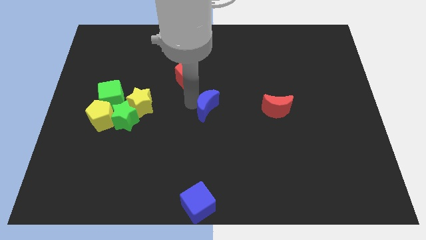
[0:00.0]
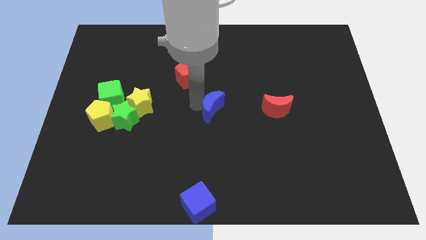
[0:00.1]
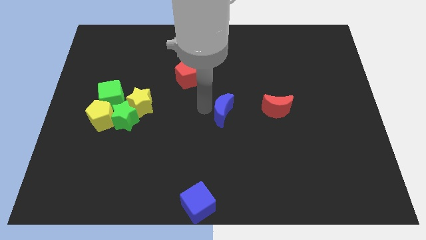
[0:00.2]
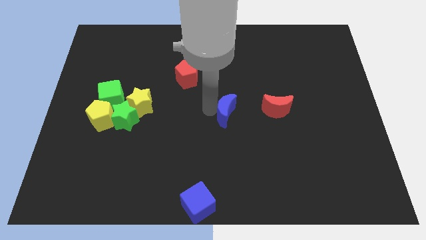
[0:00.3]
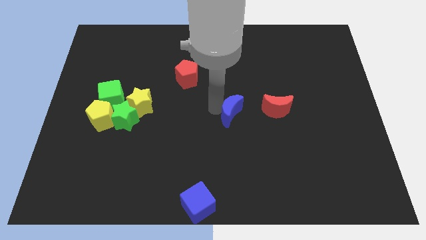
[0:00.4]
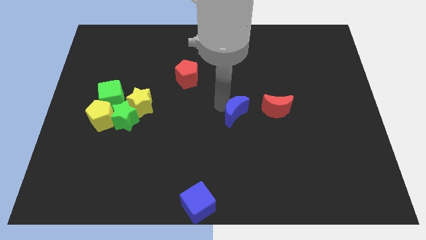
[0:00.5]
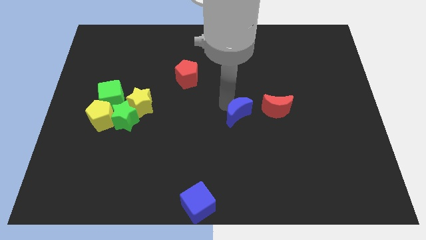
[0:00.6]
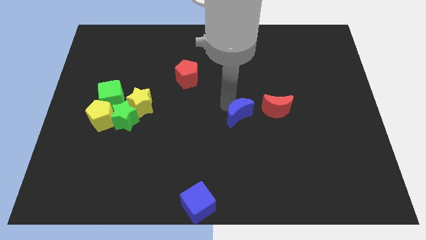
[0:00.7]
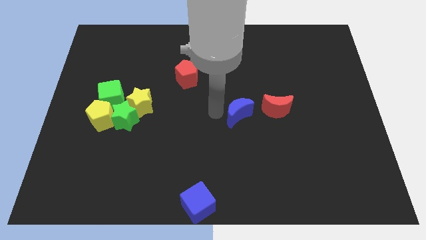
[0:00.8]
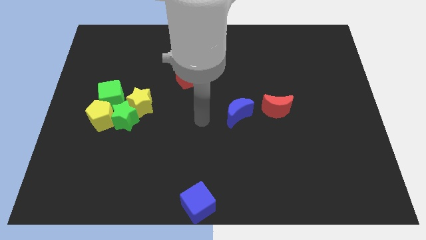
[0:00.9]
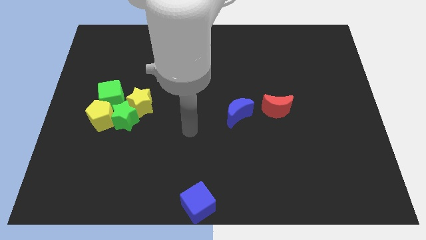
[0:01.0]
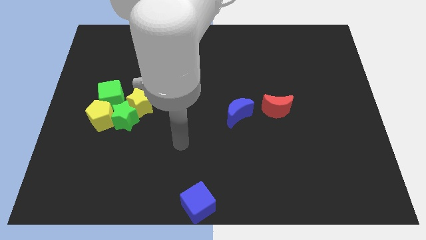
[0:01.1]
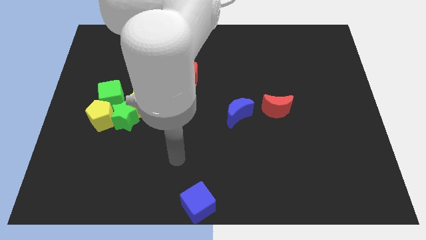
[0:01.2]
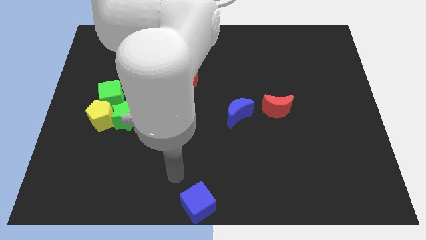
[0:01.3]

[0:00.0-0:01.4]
push the blue crescent towards the red crescent

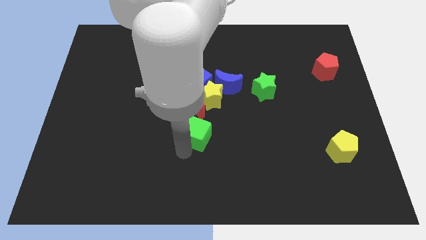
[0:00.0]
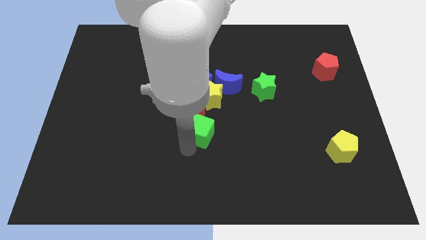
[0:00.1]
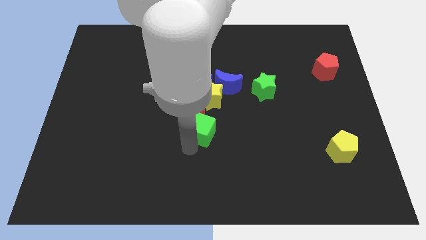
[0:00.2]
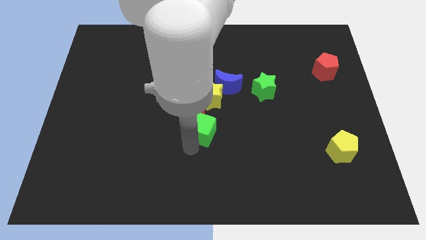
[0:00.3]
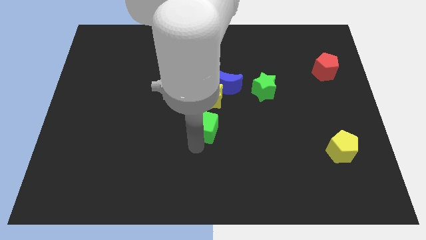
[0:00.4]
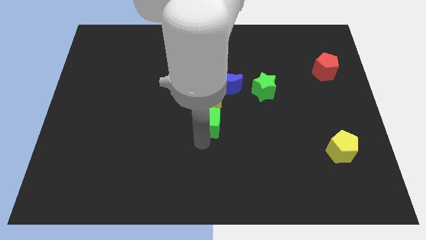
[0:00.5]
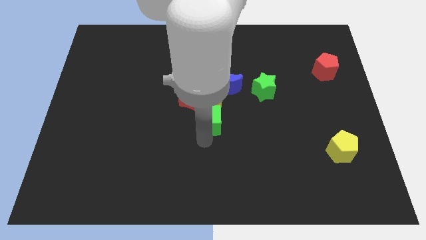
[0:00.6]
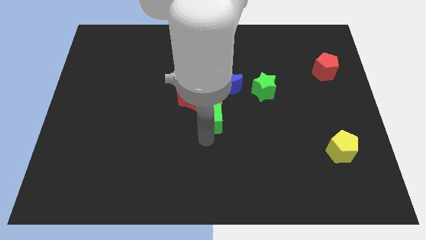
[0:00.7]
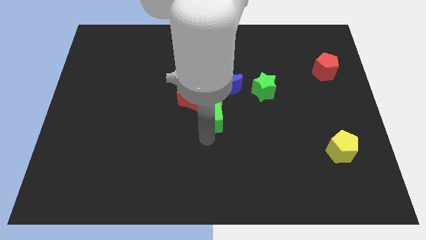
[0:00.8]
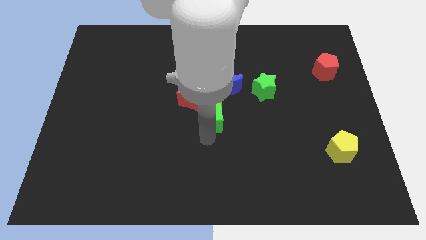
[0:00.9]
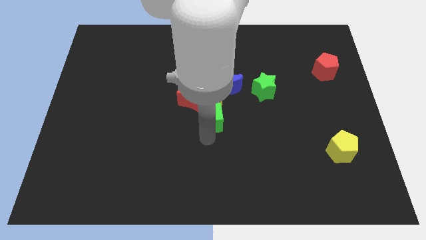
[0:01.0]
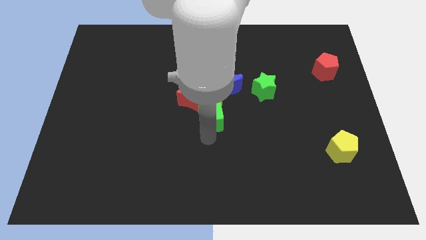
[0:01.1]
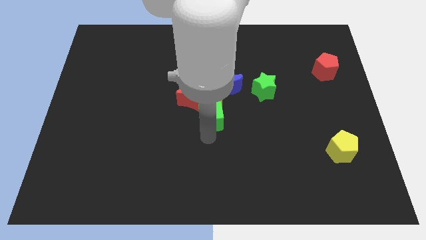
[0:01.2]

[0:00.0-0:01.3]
make the green cube touch the right side of the red crescent

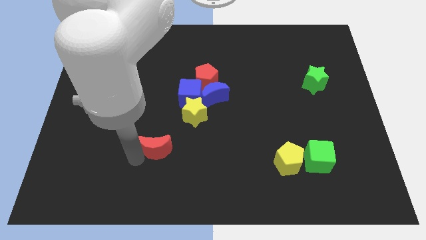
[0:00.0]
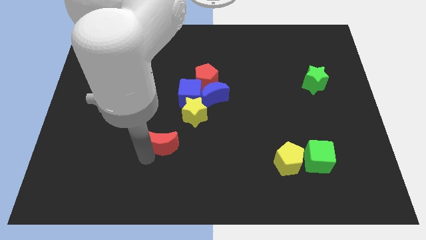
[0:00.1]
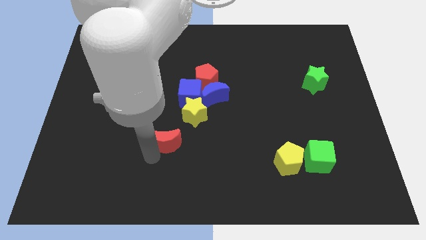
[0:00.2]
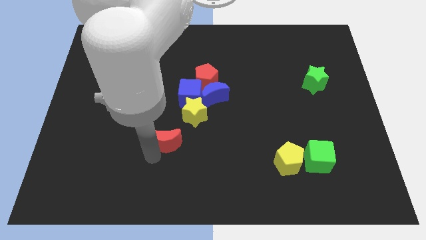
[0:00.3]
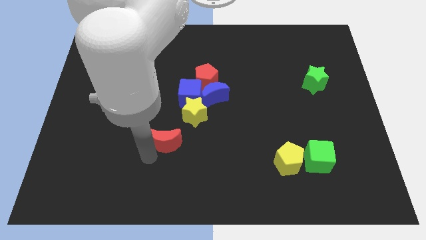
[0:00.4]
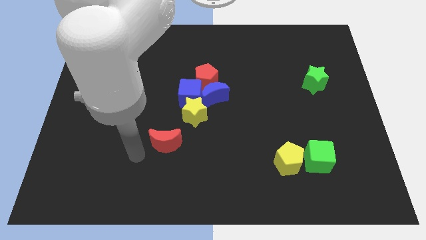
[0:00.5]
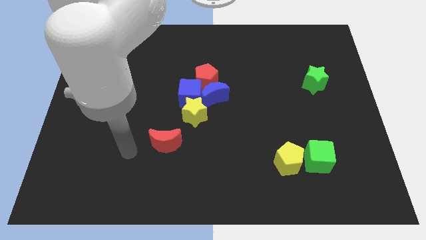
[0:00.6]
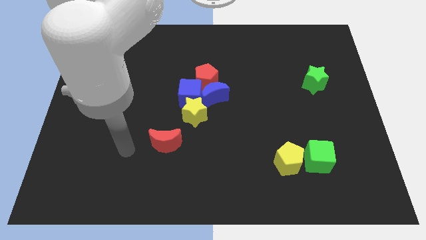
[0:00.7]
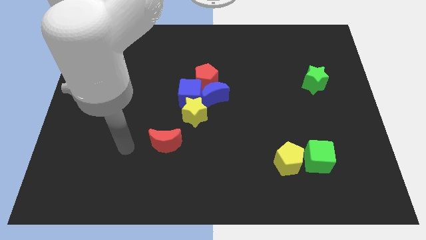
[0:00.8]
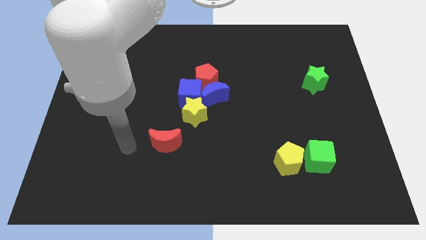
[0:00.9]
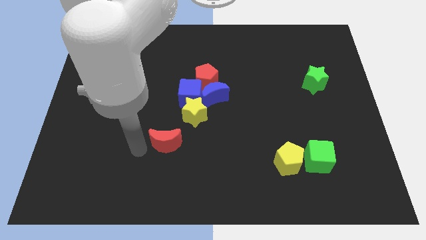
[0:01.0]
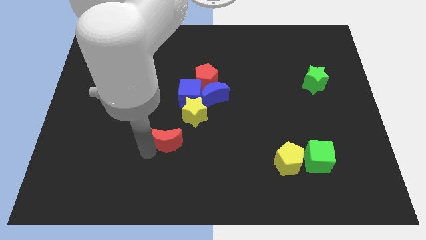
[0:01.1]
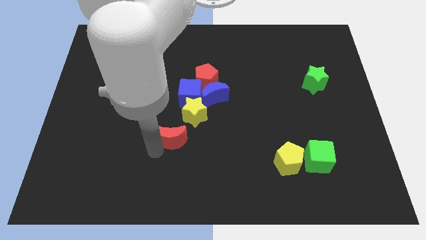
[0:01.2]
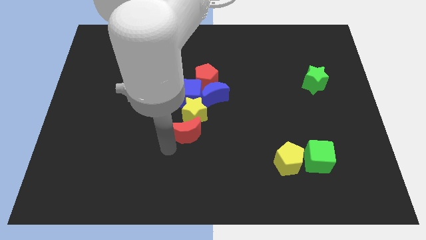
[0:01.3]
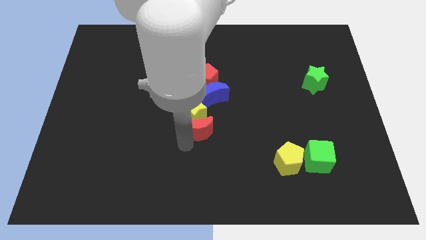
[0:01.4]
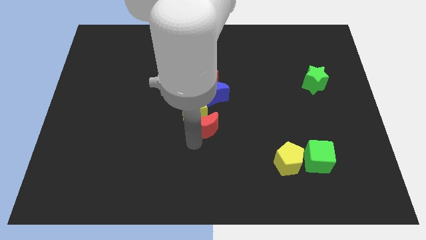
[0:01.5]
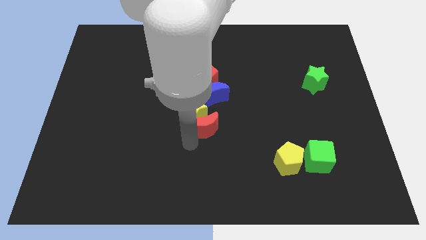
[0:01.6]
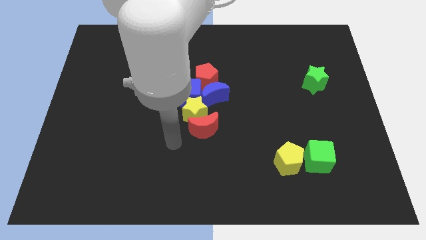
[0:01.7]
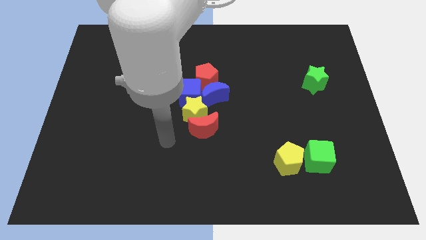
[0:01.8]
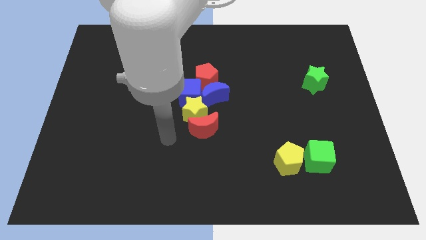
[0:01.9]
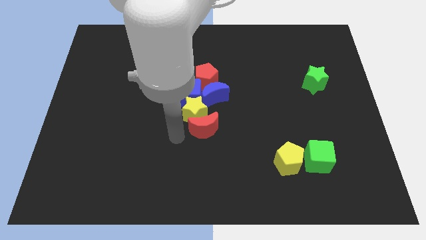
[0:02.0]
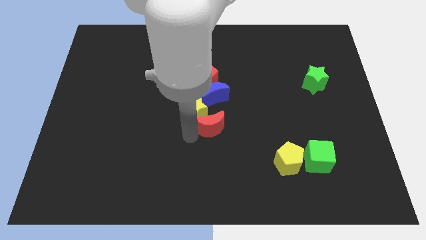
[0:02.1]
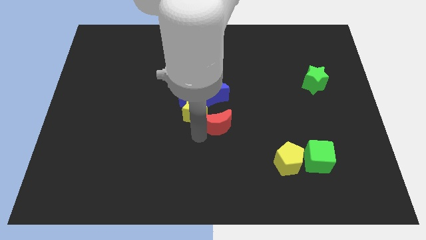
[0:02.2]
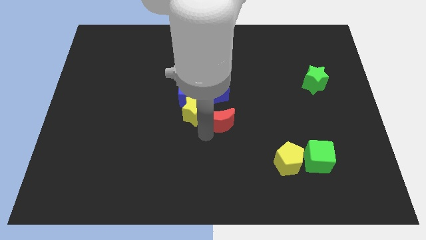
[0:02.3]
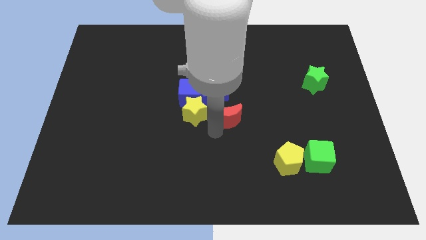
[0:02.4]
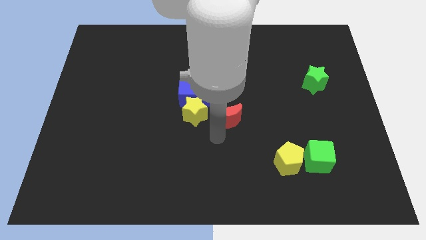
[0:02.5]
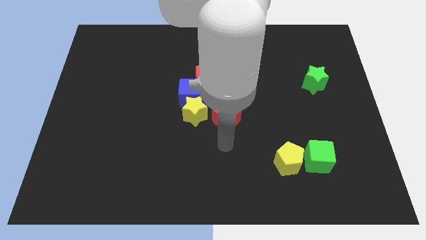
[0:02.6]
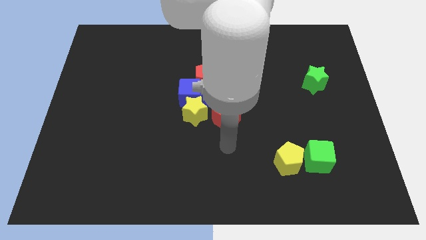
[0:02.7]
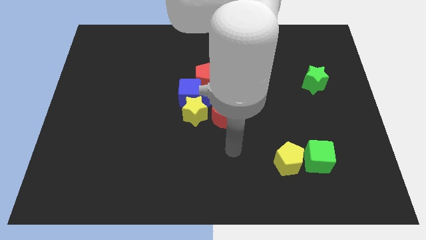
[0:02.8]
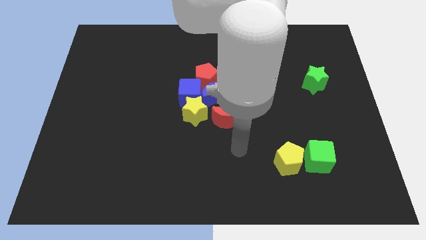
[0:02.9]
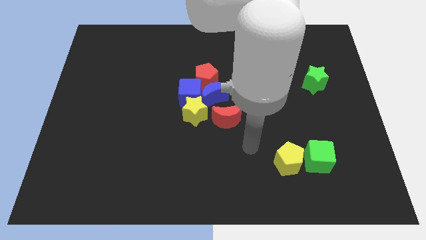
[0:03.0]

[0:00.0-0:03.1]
move the red crescent towards the blue crescent

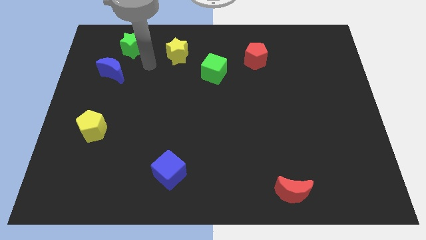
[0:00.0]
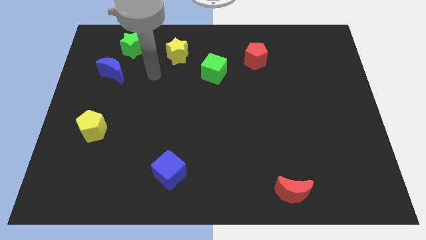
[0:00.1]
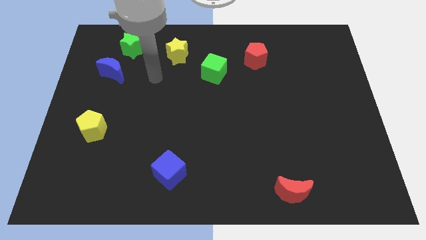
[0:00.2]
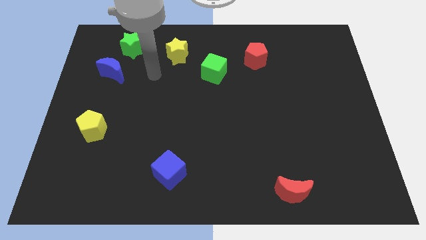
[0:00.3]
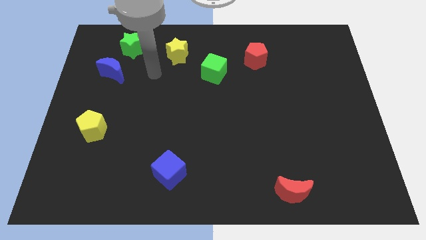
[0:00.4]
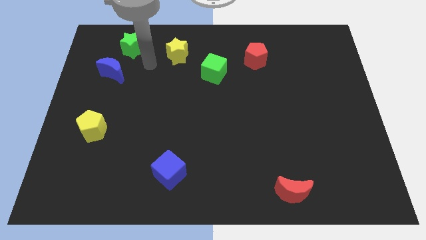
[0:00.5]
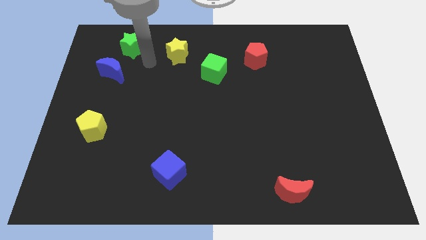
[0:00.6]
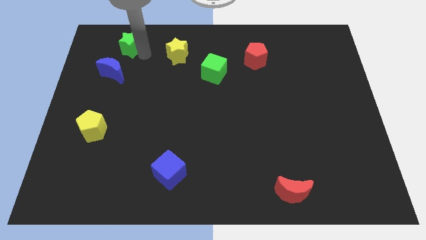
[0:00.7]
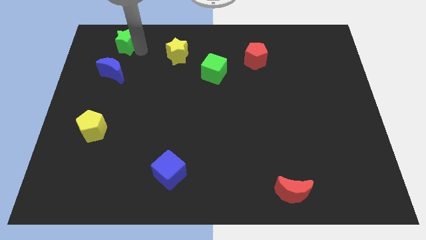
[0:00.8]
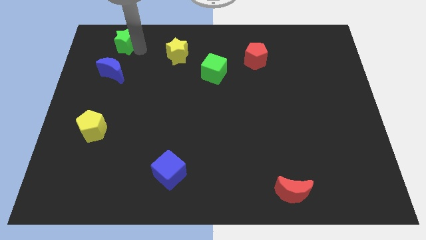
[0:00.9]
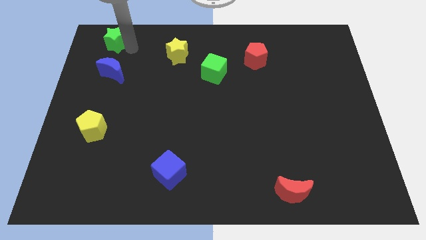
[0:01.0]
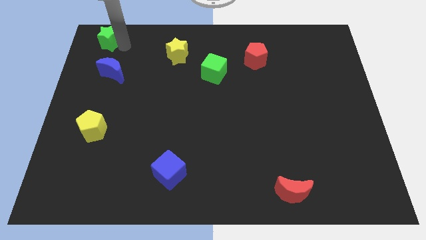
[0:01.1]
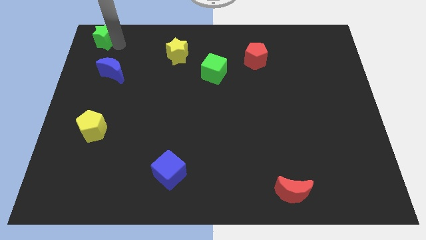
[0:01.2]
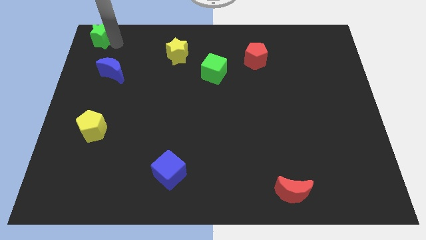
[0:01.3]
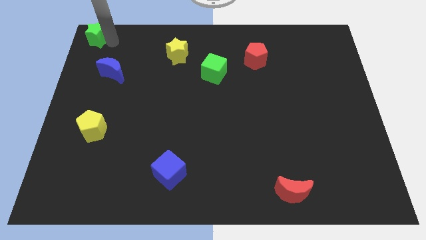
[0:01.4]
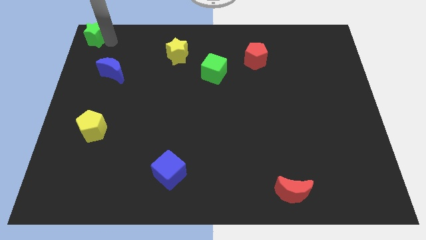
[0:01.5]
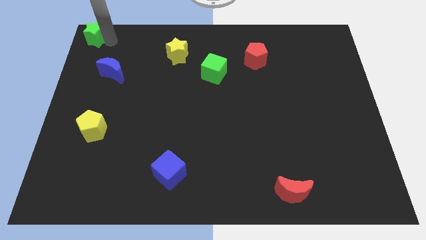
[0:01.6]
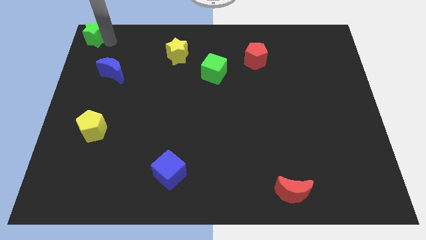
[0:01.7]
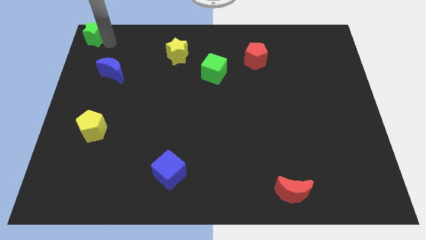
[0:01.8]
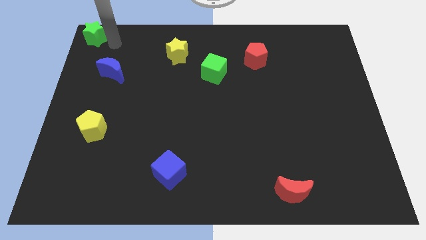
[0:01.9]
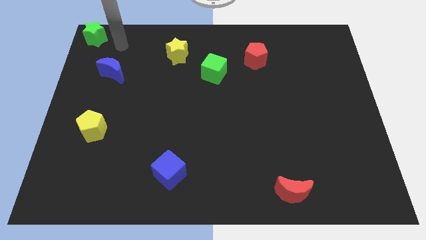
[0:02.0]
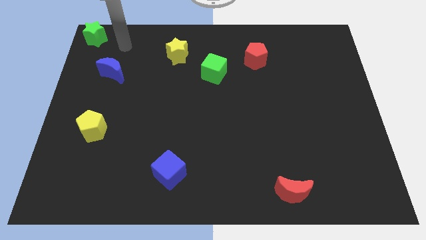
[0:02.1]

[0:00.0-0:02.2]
move green star to the top left corner

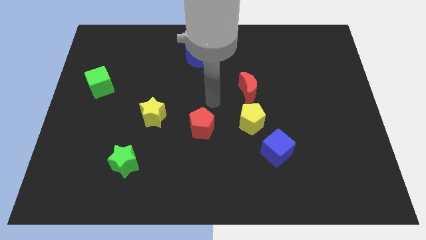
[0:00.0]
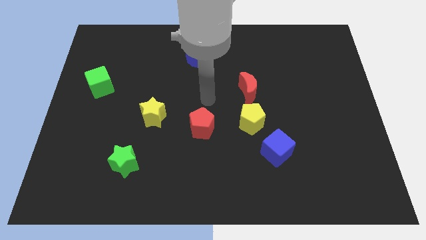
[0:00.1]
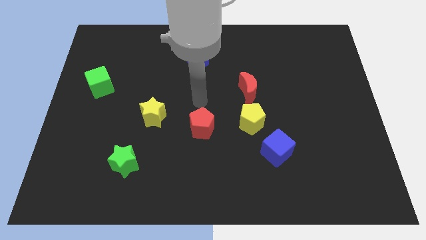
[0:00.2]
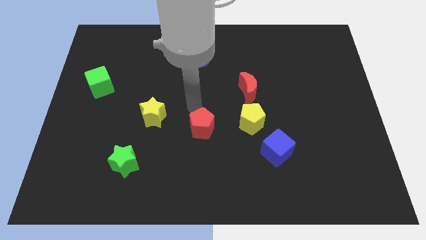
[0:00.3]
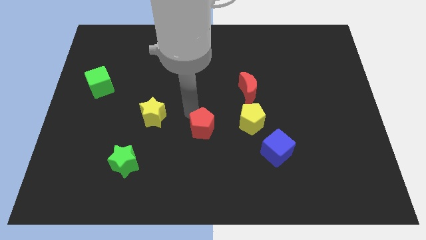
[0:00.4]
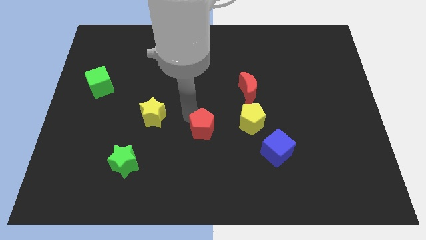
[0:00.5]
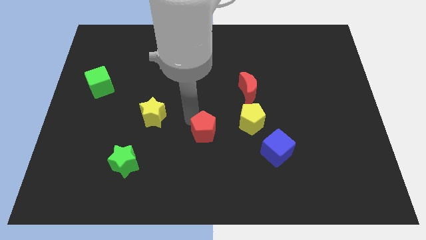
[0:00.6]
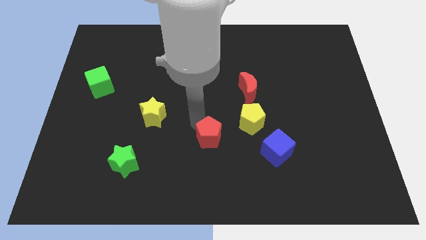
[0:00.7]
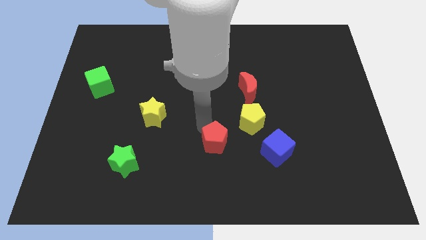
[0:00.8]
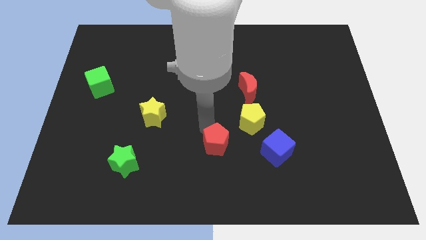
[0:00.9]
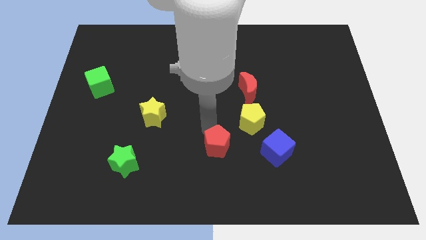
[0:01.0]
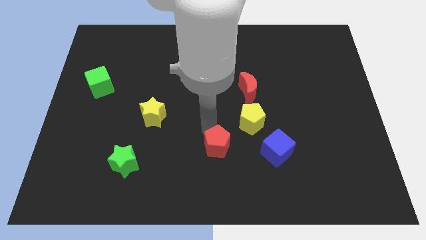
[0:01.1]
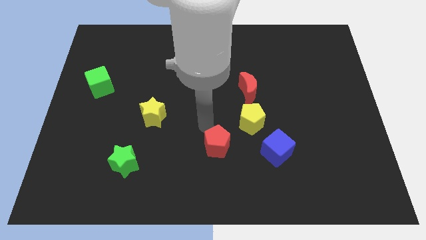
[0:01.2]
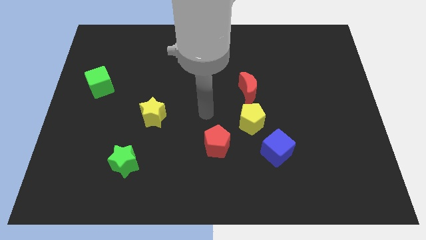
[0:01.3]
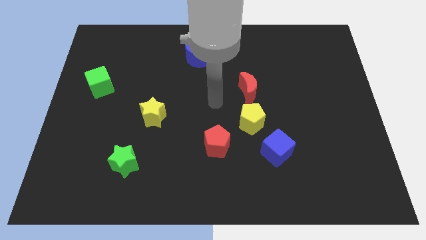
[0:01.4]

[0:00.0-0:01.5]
move the red pentagon downwards slightly
